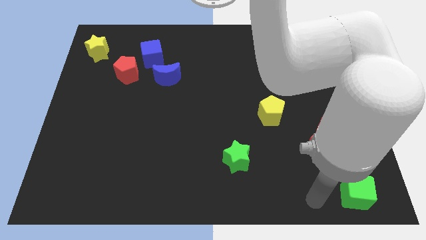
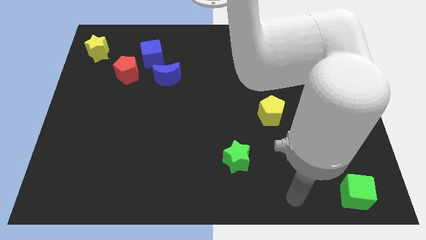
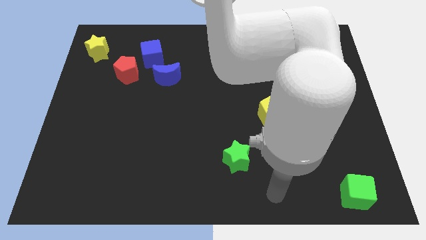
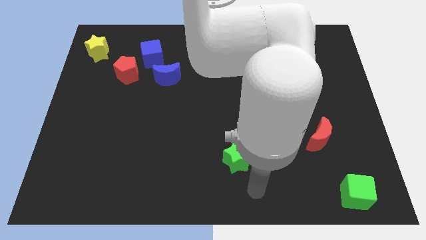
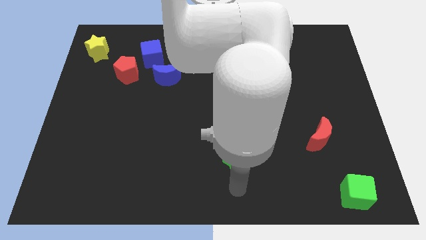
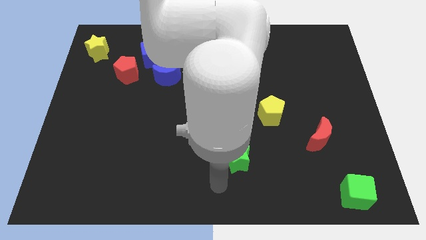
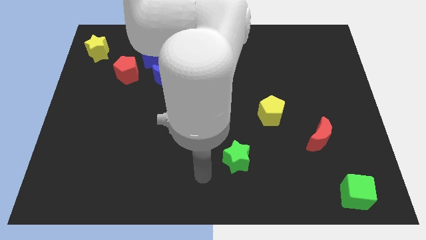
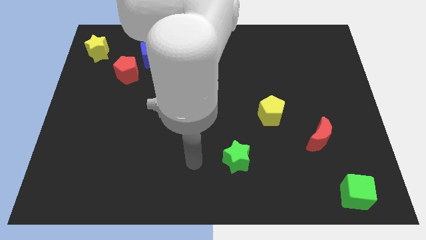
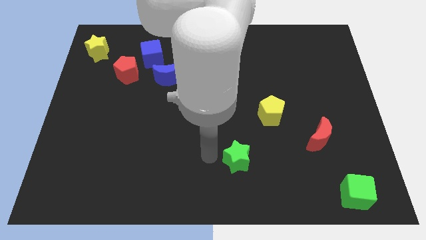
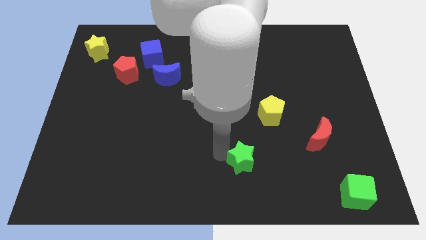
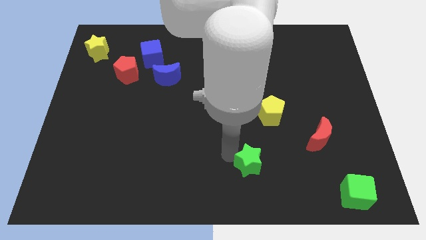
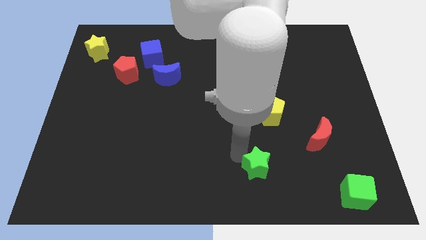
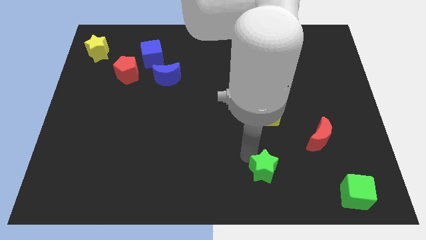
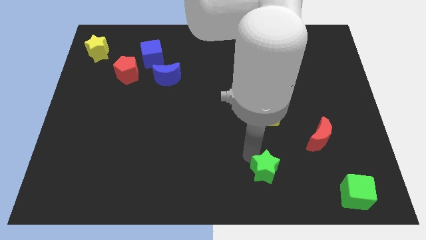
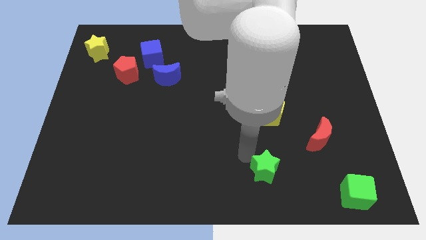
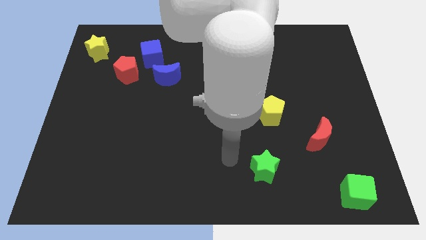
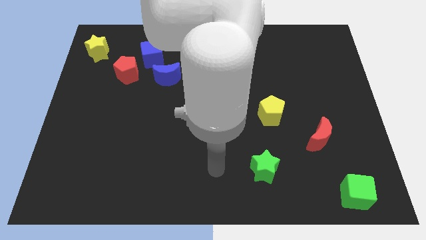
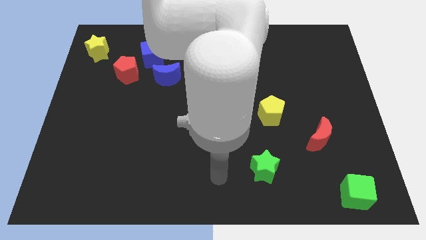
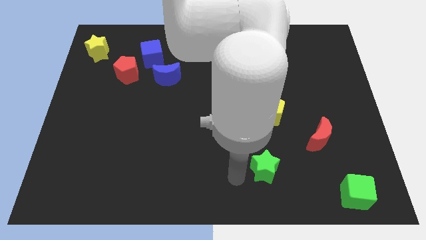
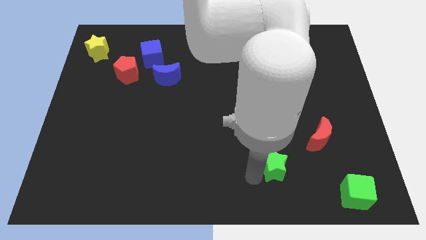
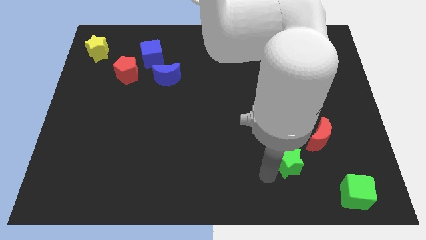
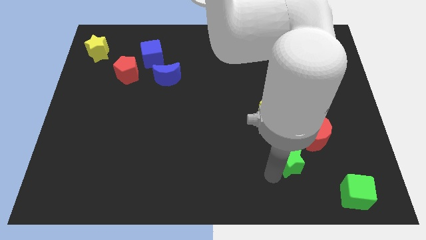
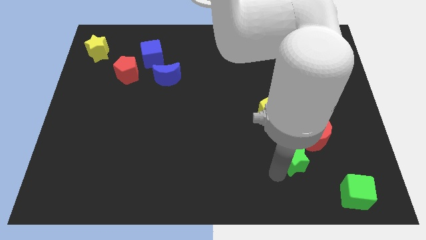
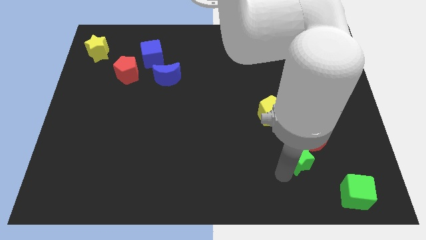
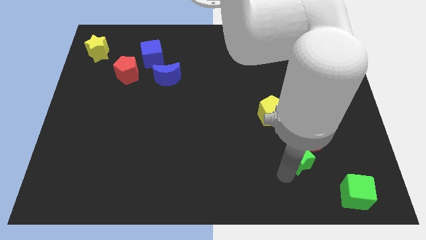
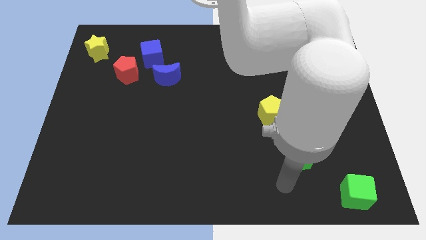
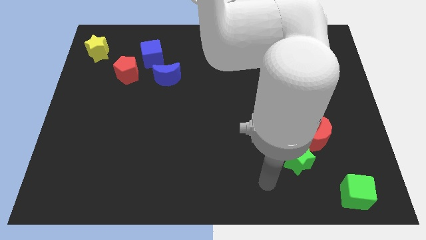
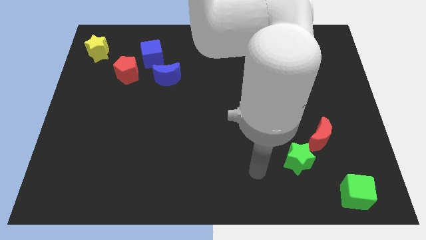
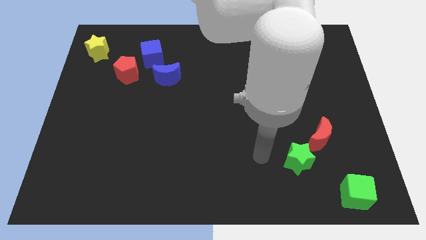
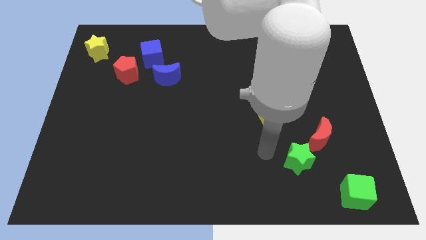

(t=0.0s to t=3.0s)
push the green star downward

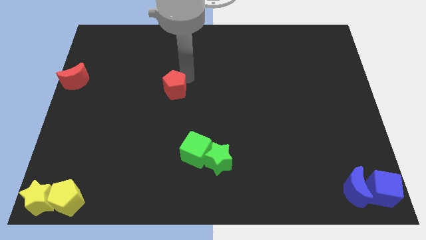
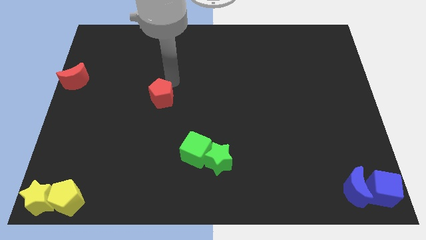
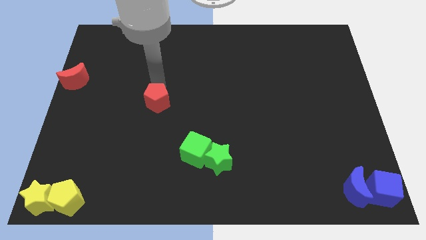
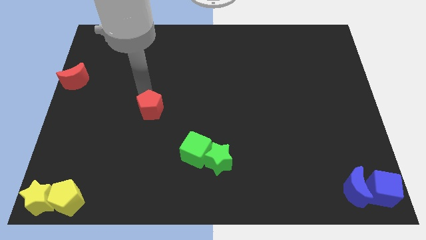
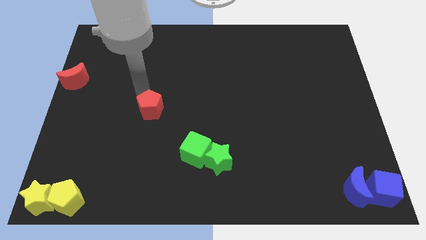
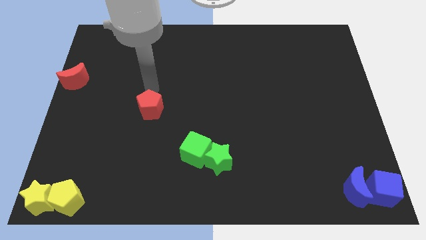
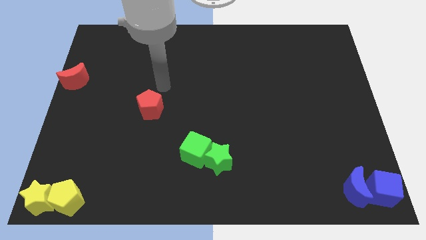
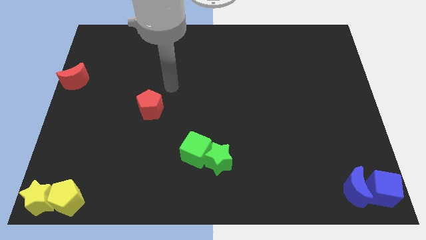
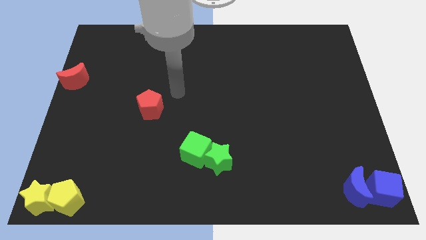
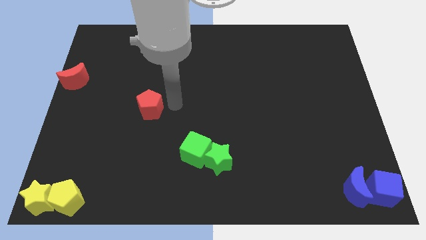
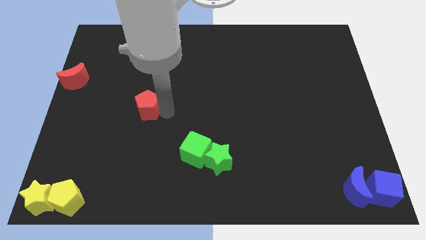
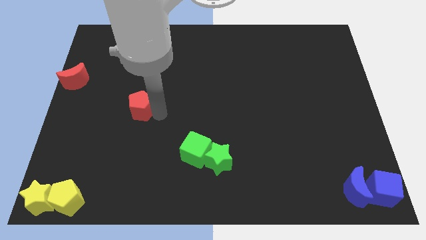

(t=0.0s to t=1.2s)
place the red pentagon diagonal to the green cube

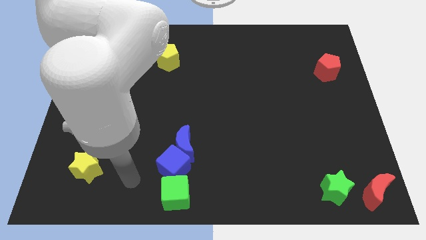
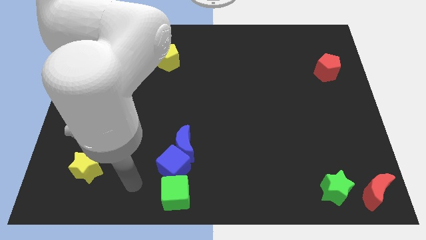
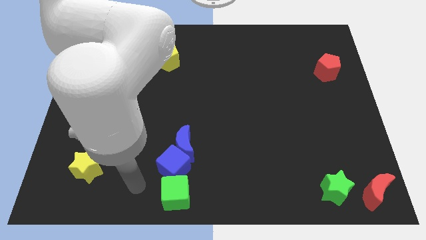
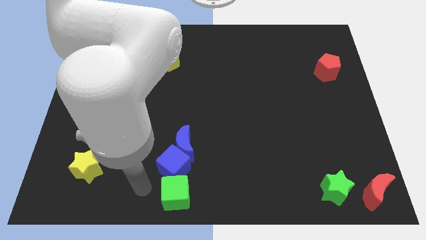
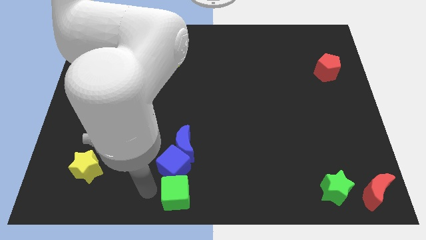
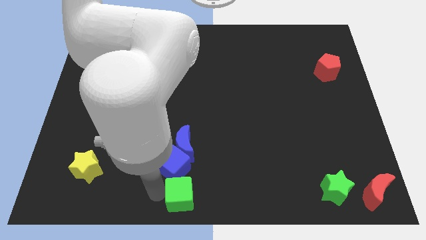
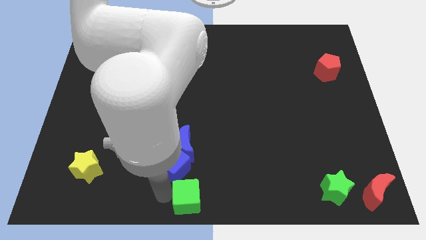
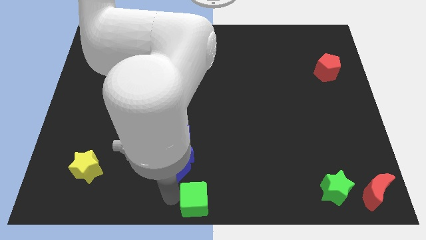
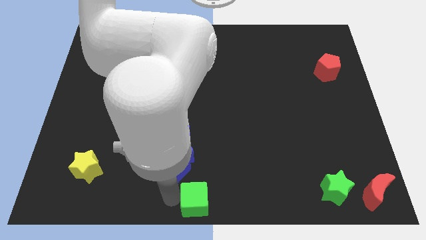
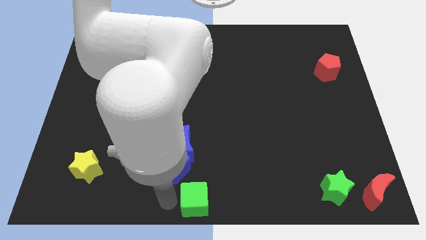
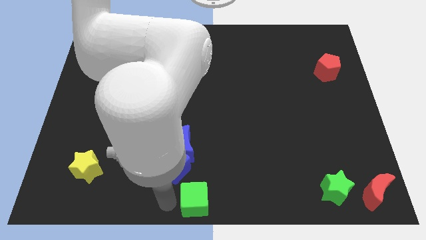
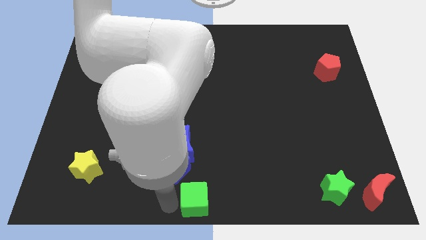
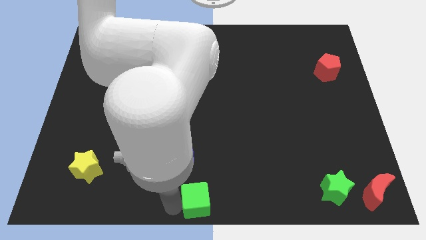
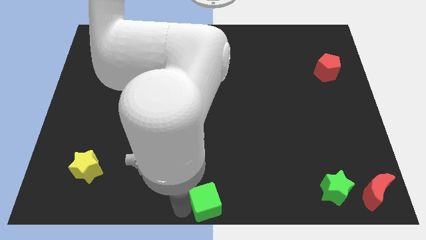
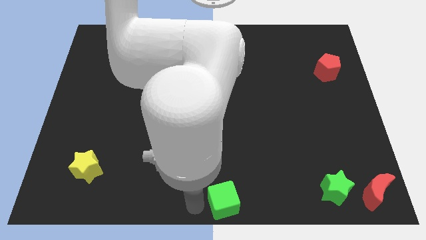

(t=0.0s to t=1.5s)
move the green cube to the bottom center

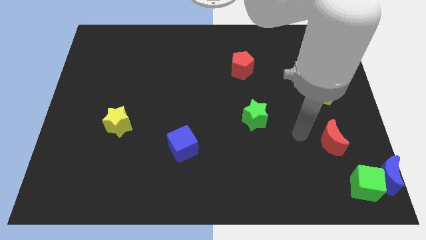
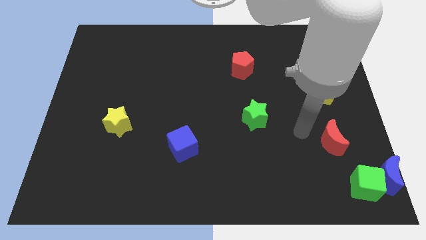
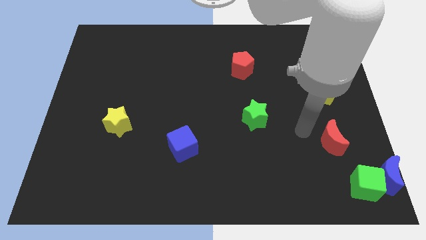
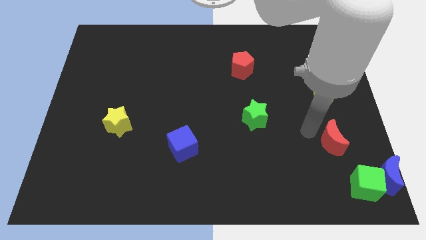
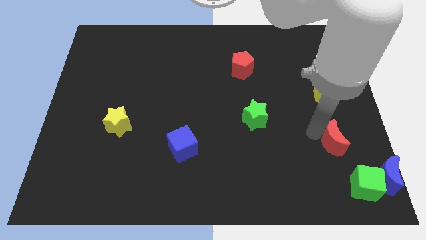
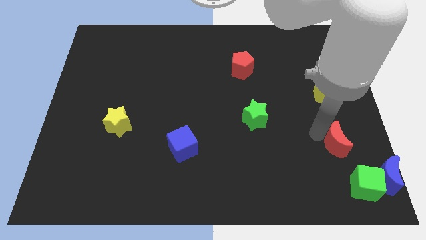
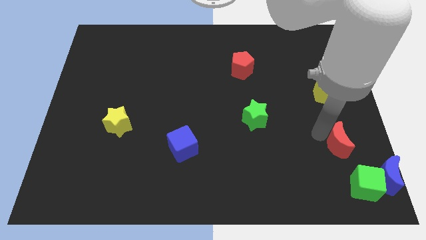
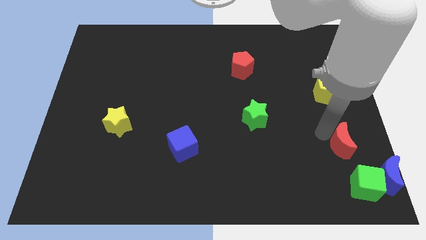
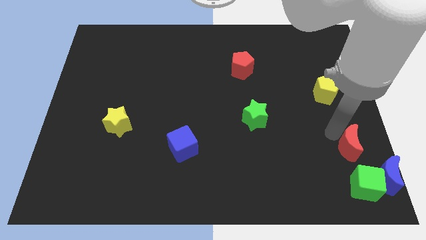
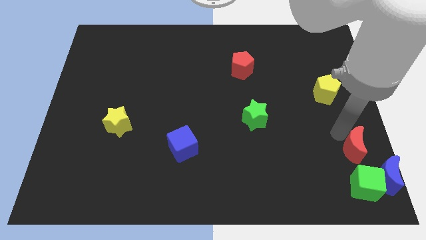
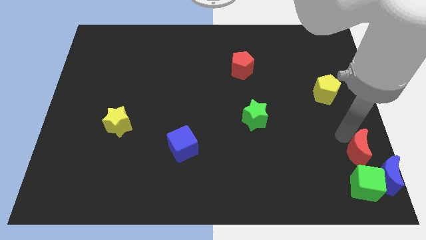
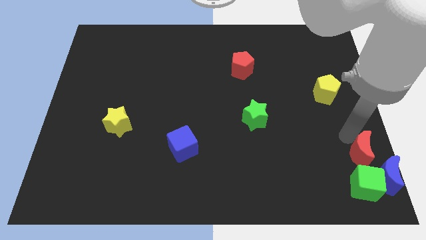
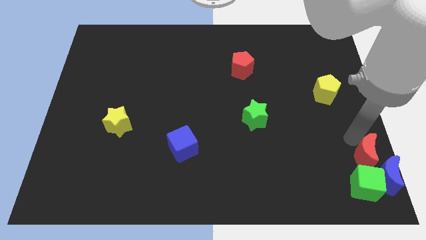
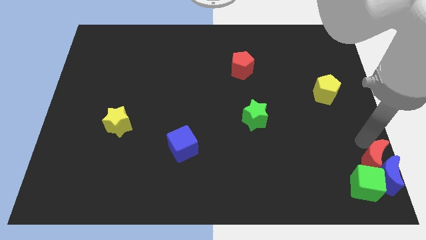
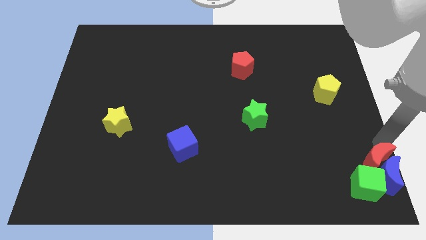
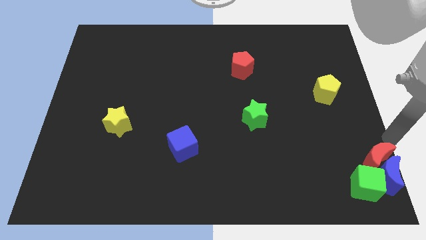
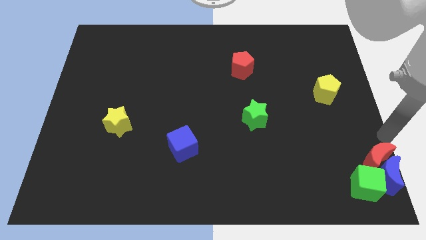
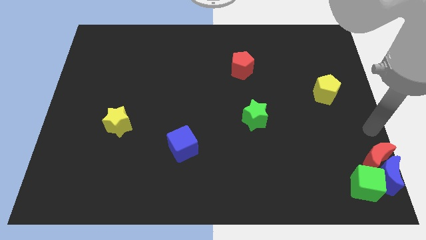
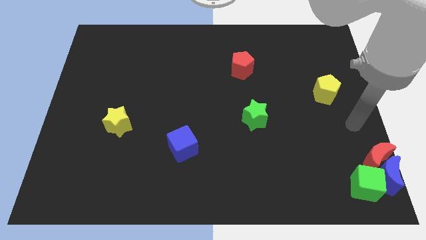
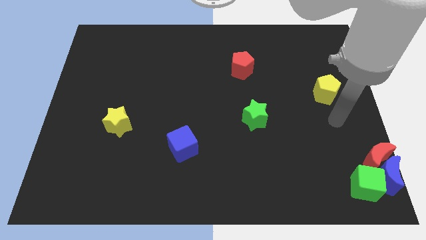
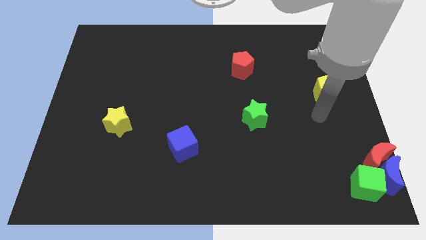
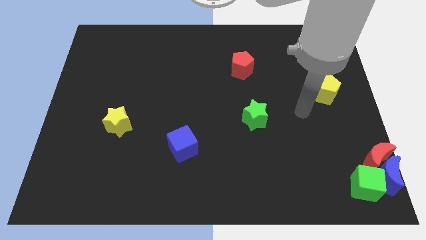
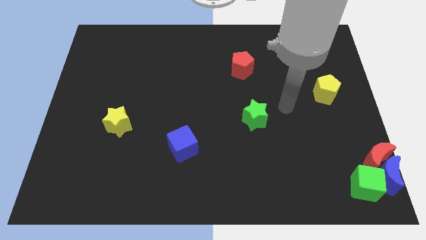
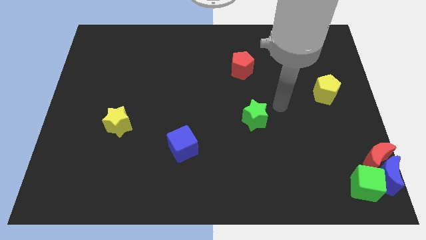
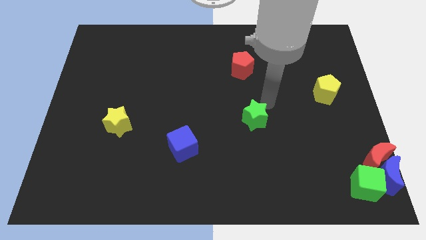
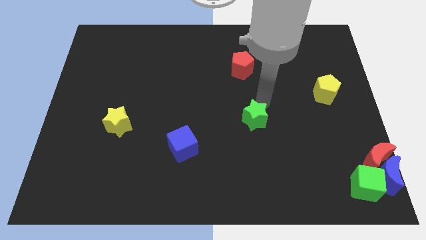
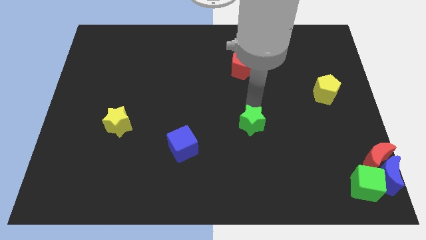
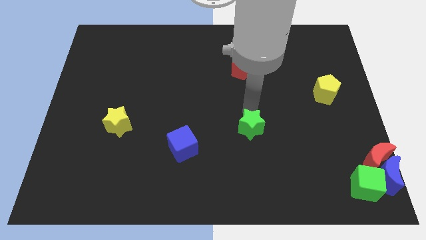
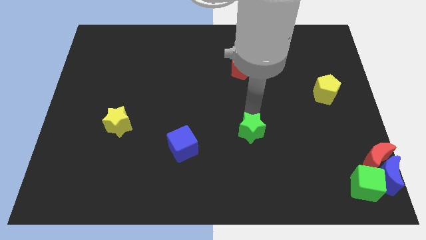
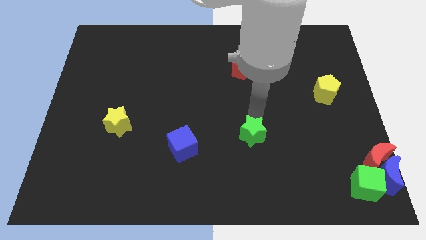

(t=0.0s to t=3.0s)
push red moon top of the blue moon

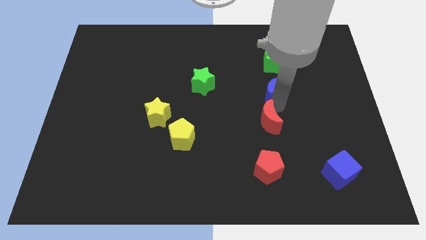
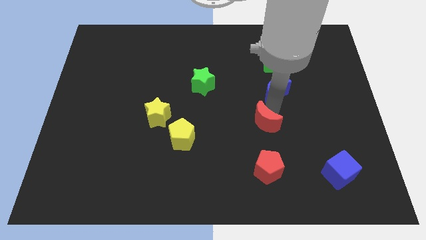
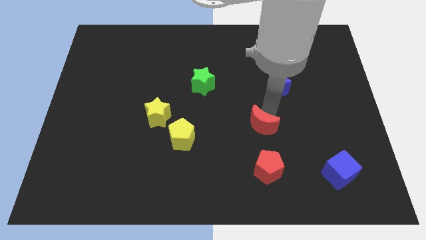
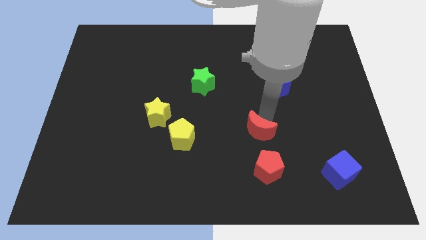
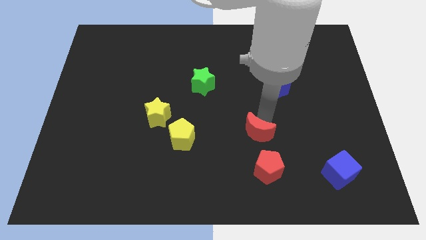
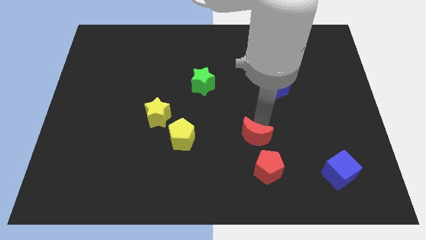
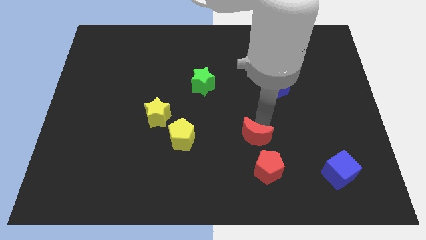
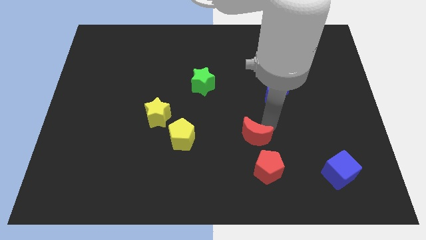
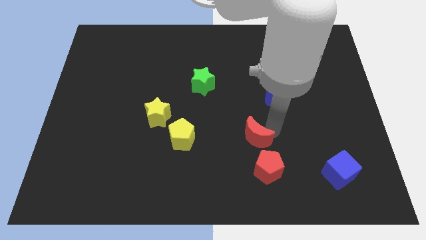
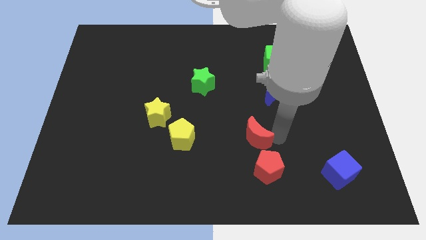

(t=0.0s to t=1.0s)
place red moon to the top of red pentagon
